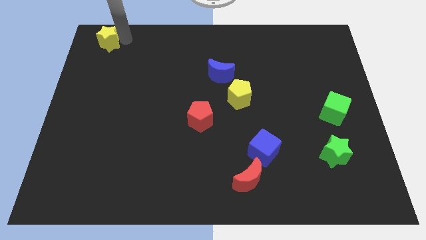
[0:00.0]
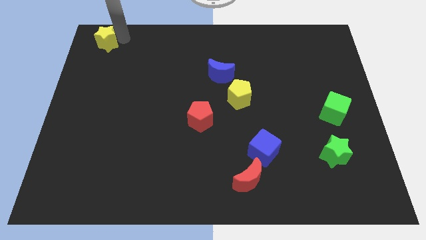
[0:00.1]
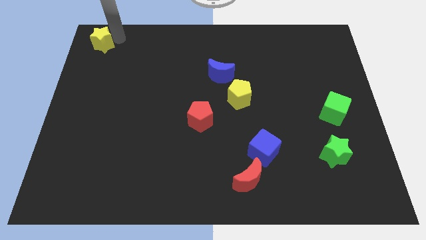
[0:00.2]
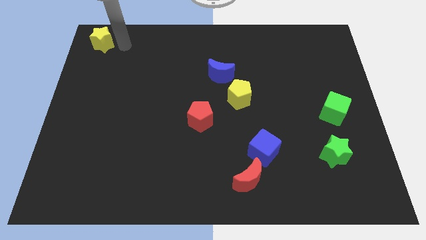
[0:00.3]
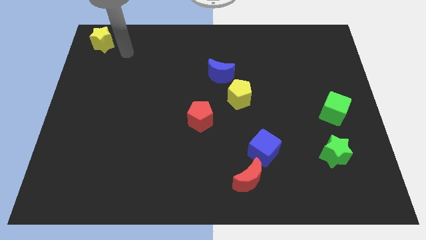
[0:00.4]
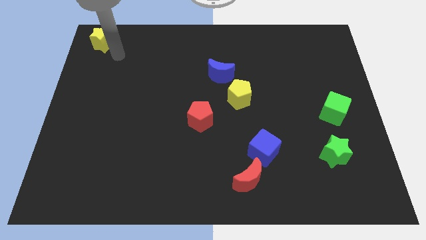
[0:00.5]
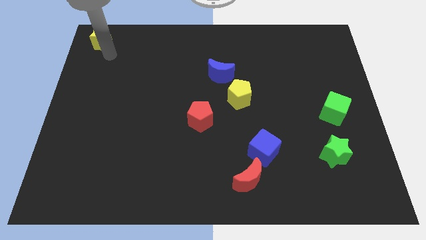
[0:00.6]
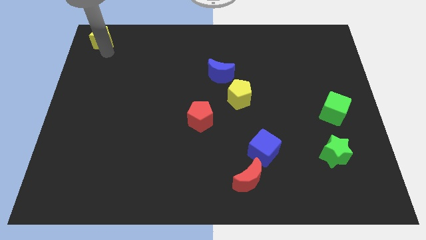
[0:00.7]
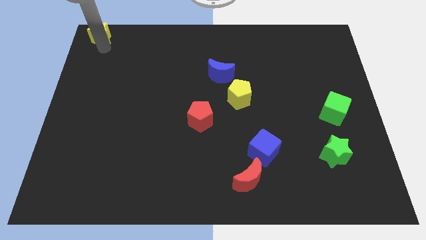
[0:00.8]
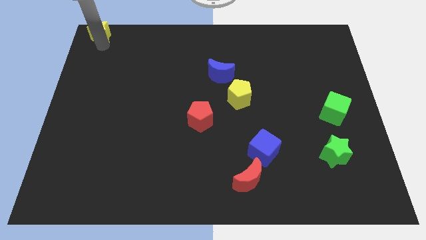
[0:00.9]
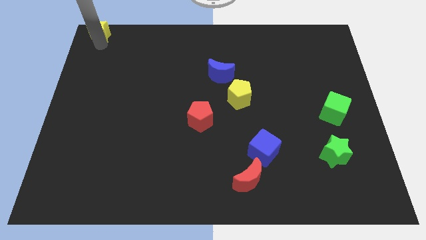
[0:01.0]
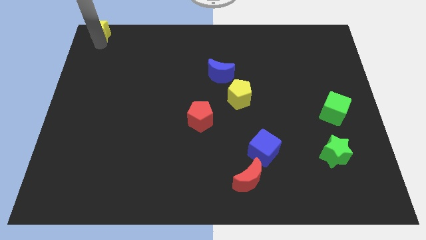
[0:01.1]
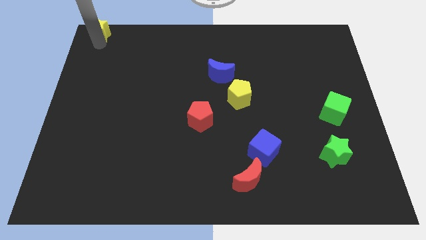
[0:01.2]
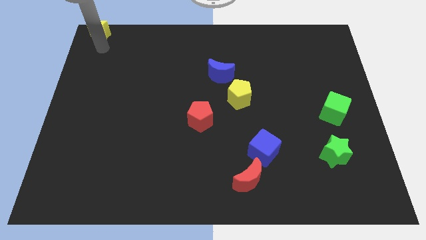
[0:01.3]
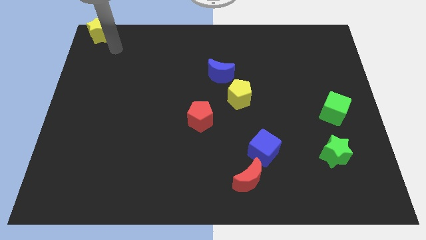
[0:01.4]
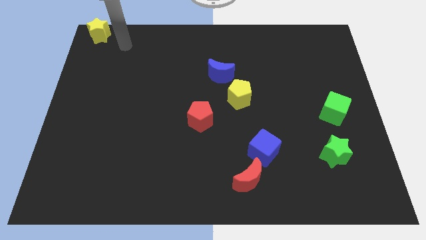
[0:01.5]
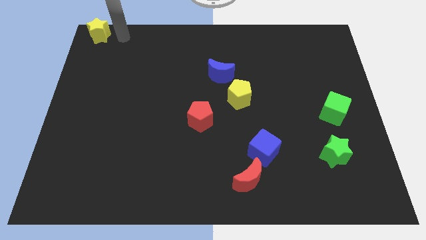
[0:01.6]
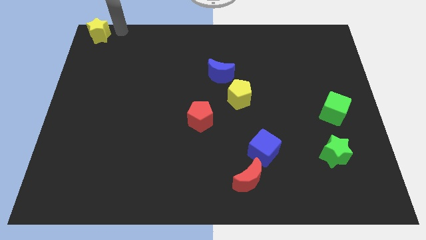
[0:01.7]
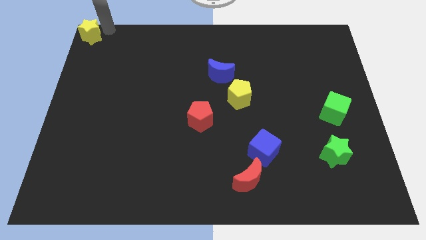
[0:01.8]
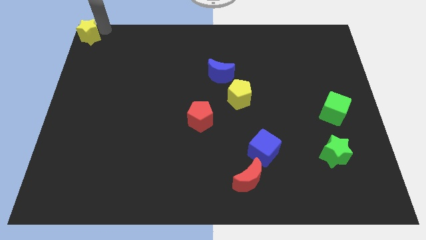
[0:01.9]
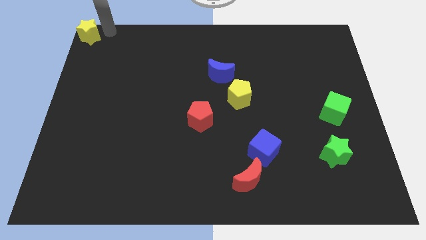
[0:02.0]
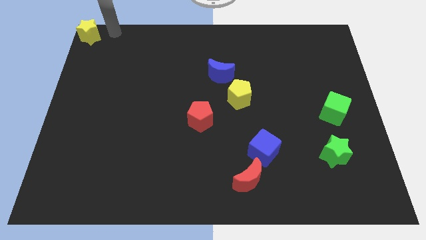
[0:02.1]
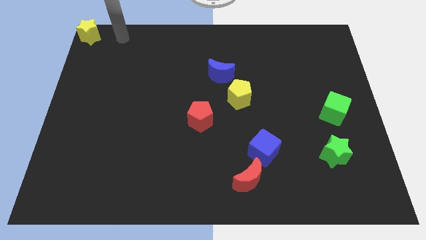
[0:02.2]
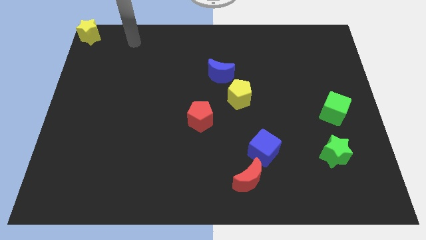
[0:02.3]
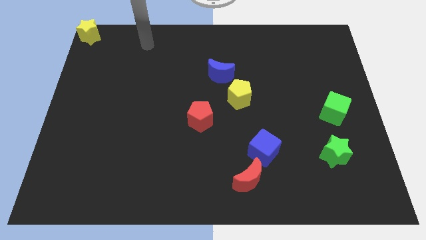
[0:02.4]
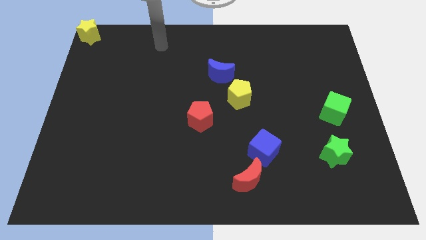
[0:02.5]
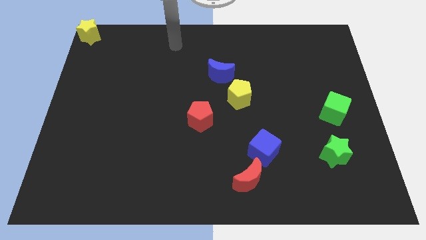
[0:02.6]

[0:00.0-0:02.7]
move the yellow star to the top left

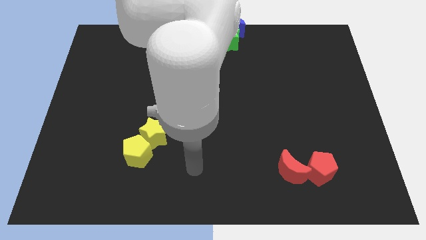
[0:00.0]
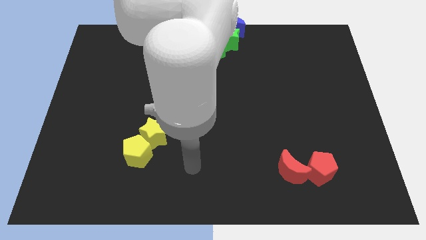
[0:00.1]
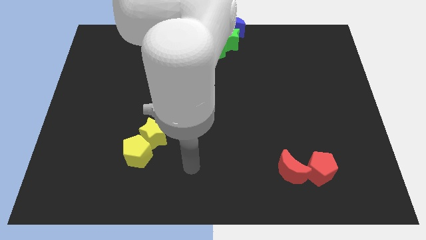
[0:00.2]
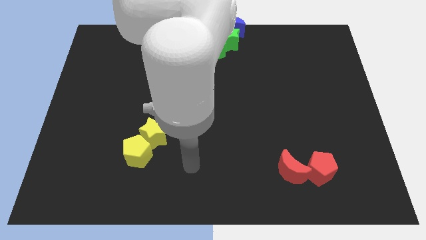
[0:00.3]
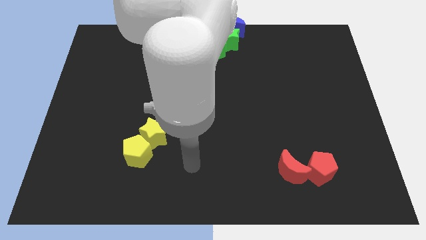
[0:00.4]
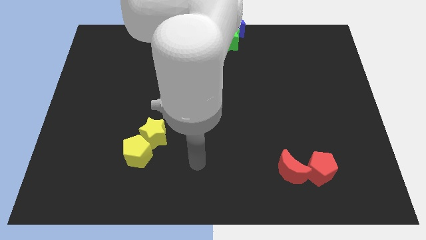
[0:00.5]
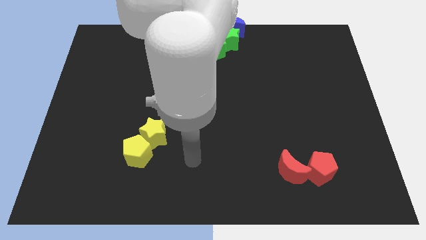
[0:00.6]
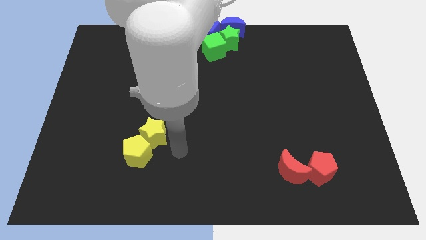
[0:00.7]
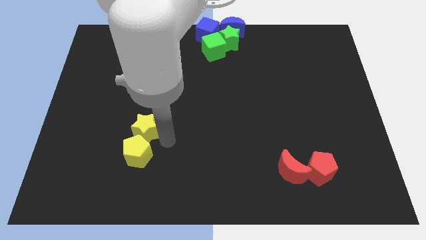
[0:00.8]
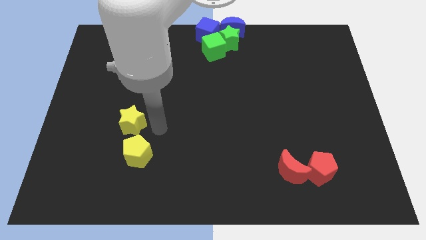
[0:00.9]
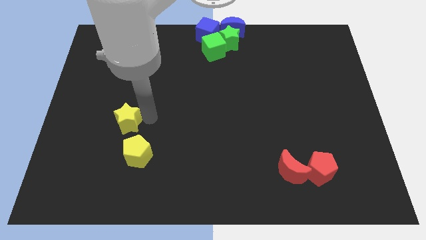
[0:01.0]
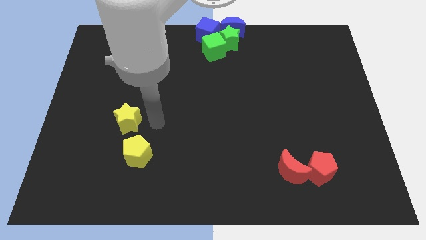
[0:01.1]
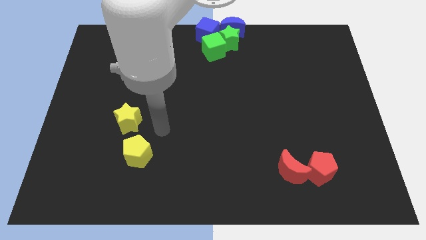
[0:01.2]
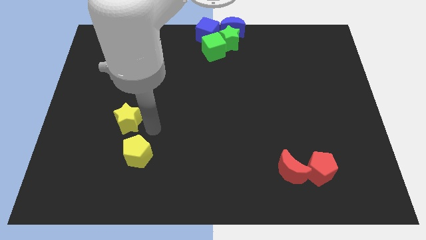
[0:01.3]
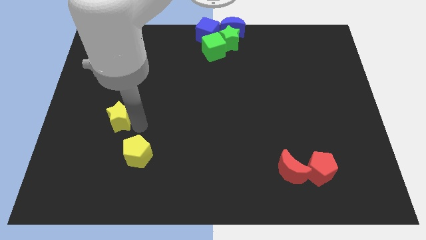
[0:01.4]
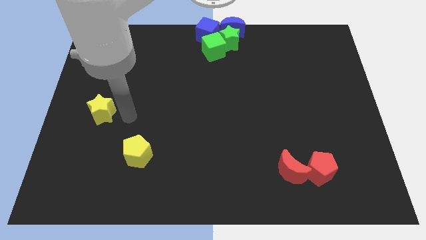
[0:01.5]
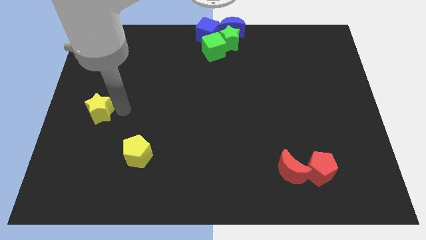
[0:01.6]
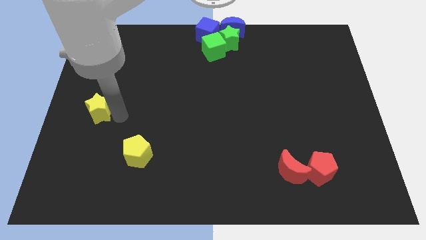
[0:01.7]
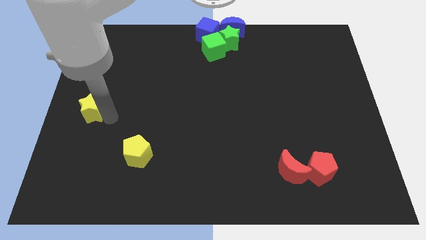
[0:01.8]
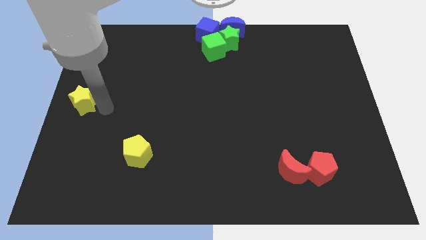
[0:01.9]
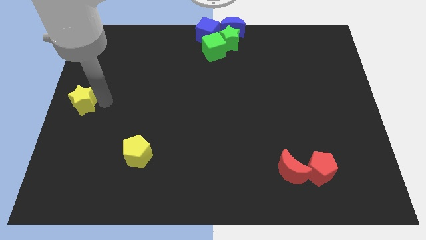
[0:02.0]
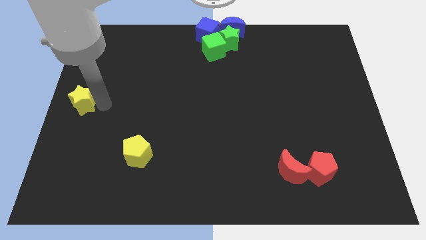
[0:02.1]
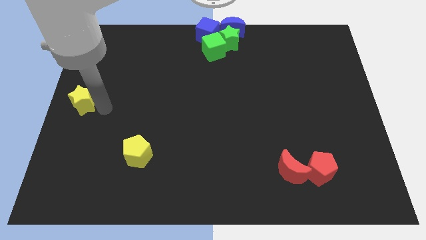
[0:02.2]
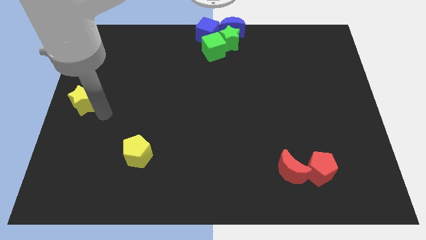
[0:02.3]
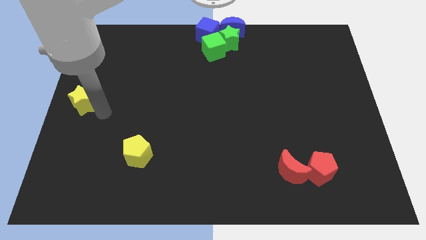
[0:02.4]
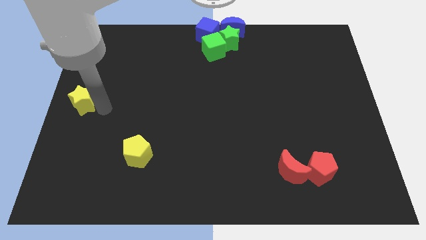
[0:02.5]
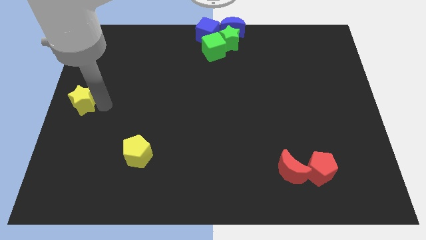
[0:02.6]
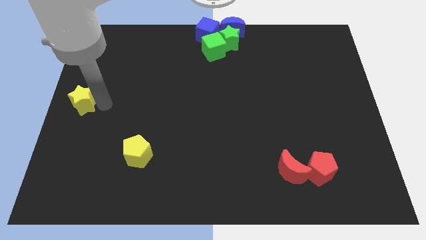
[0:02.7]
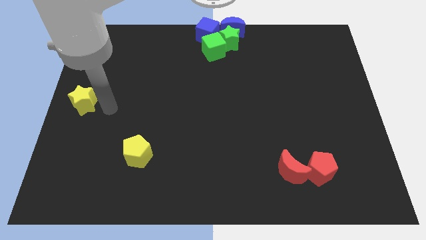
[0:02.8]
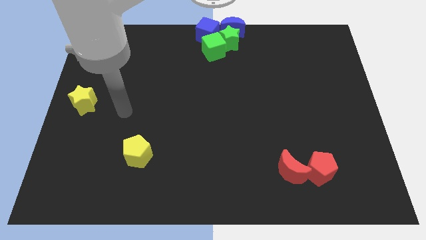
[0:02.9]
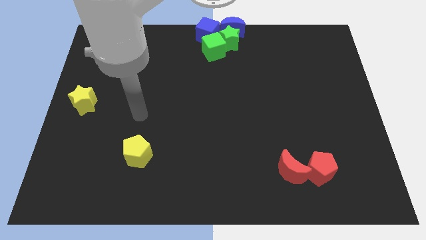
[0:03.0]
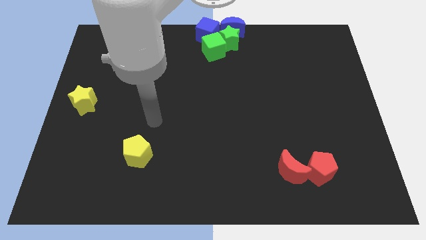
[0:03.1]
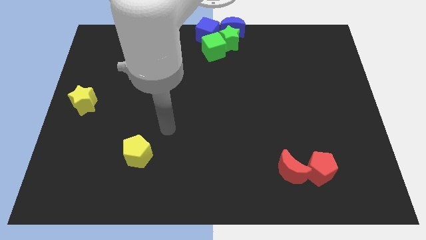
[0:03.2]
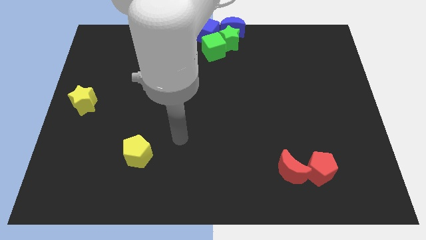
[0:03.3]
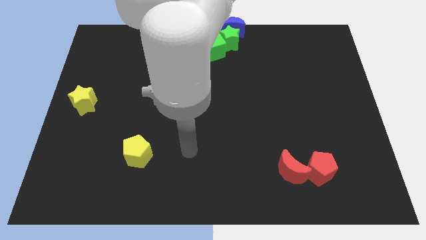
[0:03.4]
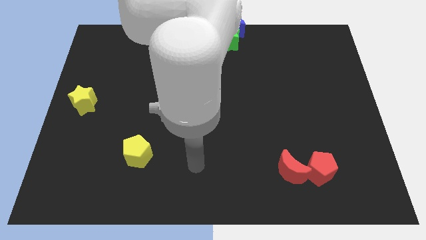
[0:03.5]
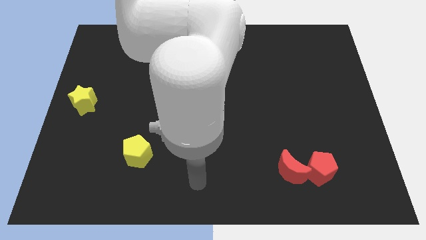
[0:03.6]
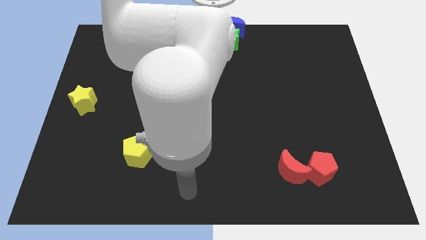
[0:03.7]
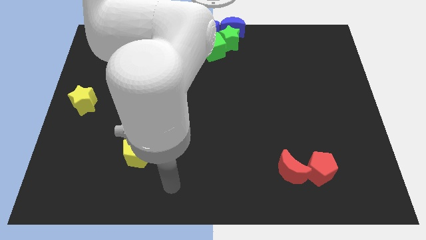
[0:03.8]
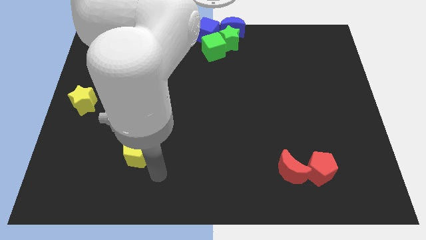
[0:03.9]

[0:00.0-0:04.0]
push the yellow star towards left side of the board

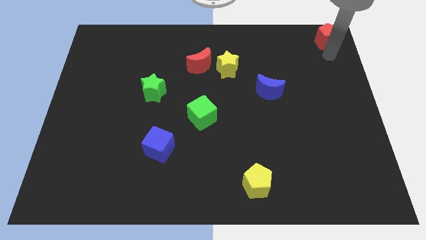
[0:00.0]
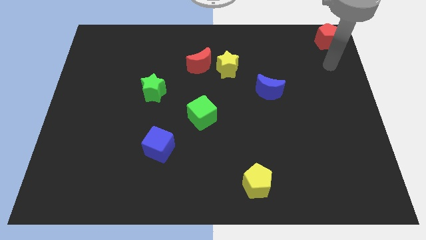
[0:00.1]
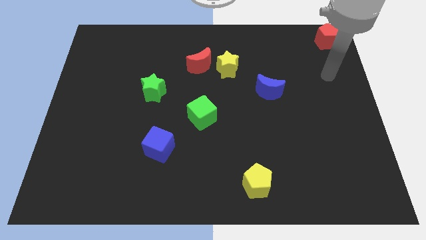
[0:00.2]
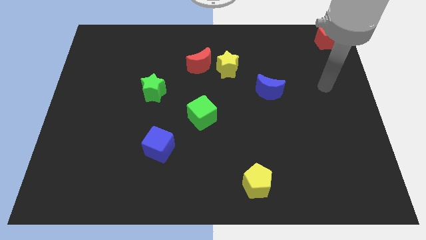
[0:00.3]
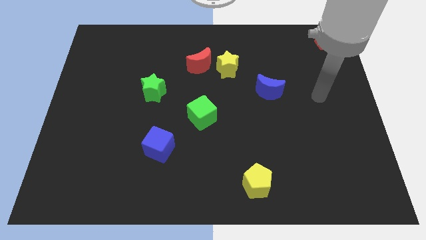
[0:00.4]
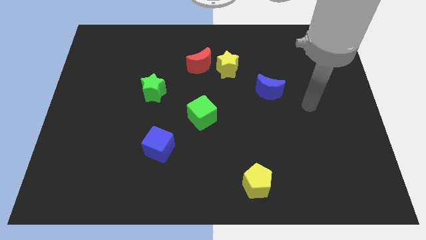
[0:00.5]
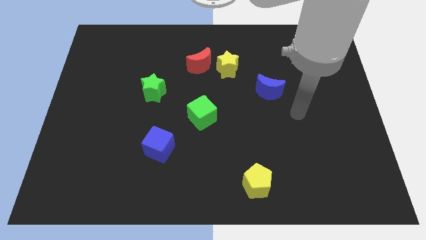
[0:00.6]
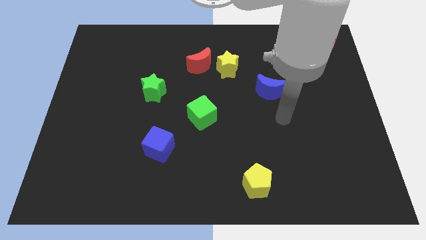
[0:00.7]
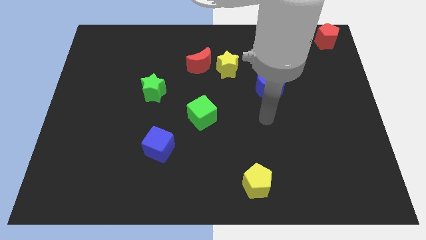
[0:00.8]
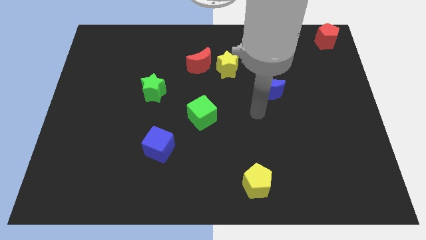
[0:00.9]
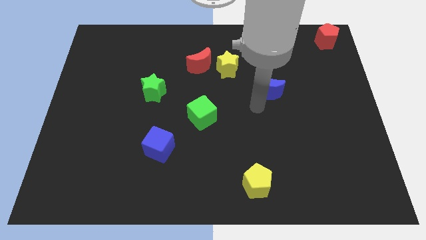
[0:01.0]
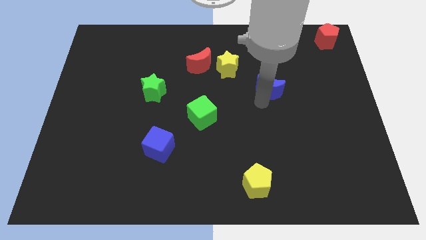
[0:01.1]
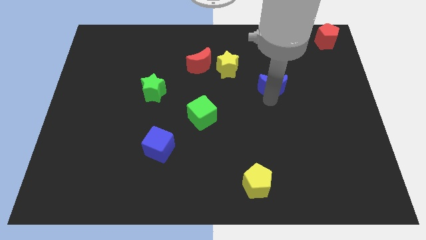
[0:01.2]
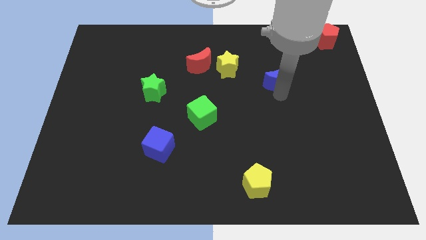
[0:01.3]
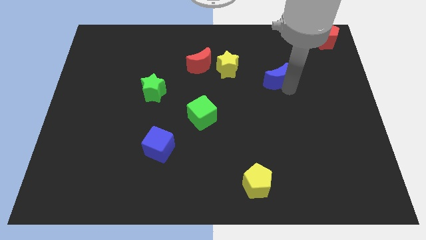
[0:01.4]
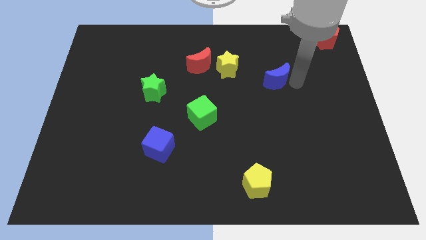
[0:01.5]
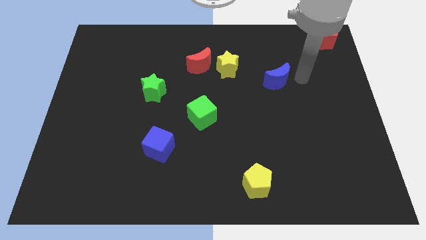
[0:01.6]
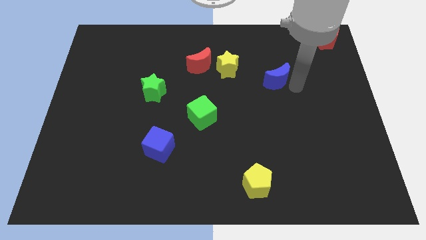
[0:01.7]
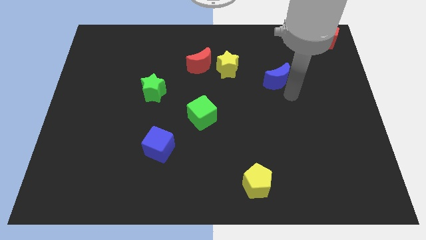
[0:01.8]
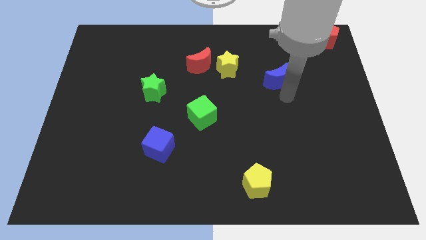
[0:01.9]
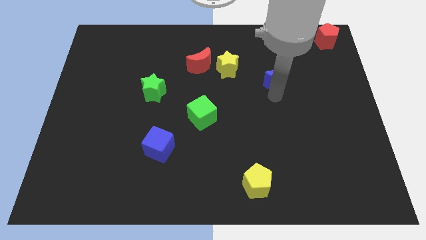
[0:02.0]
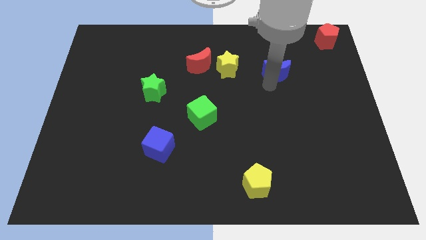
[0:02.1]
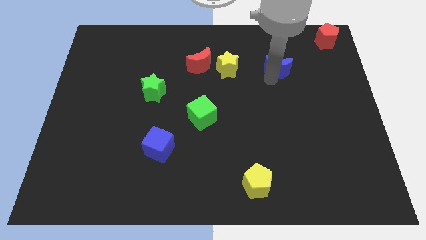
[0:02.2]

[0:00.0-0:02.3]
push blue crescent beside yellow star
